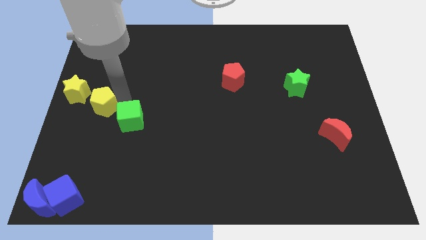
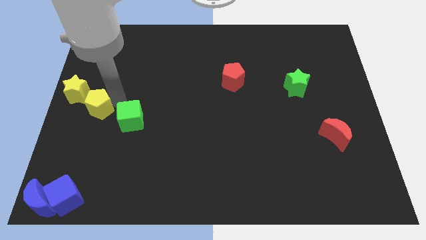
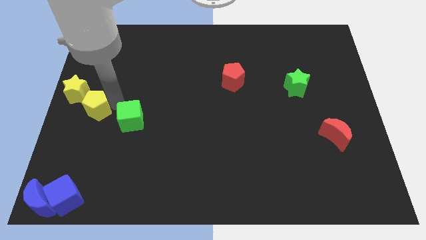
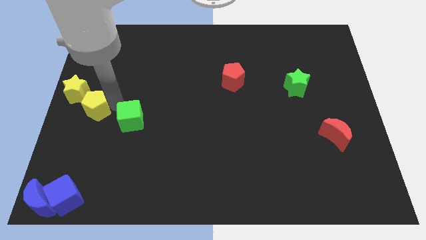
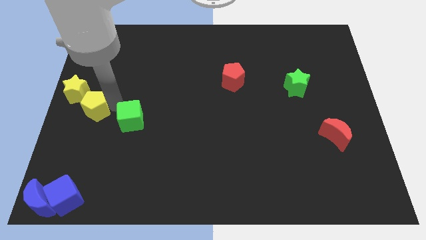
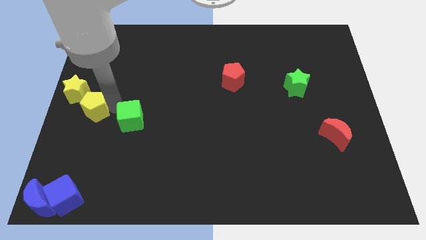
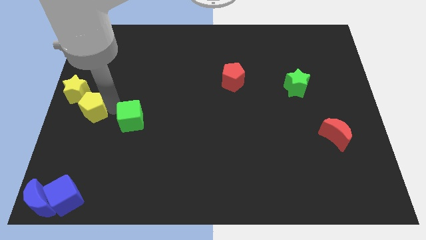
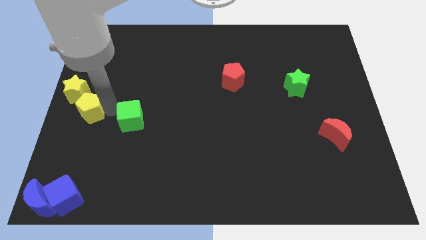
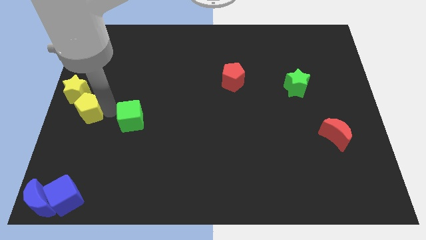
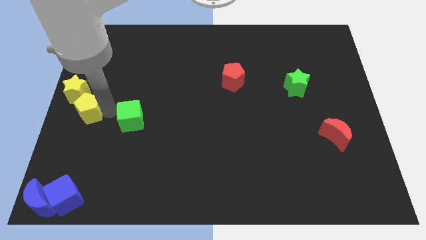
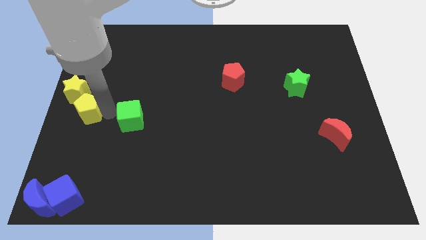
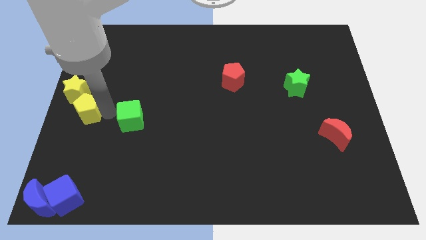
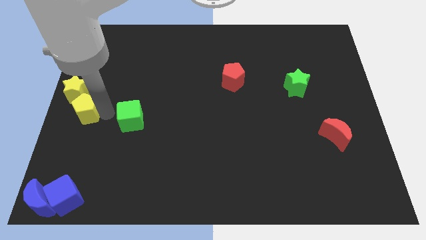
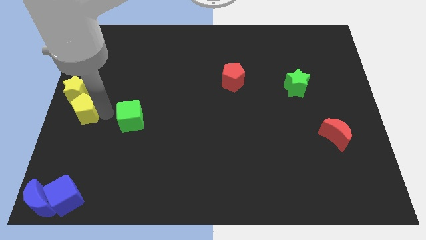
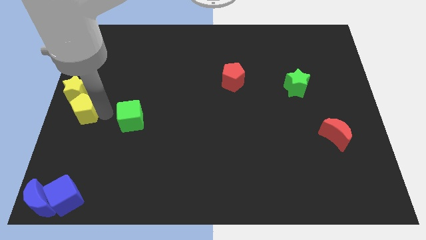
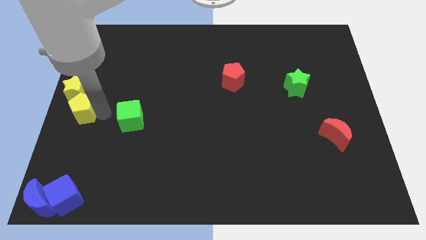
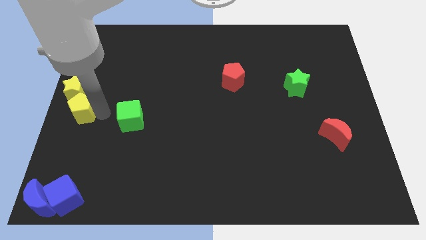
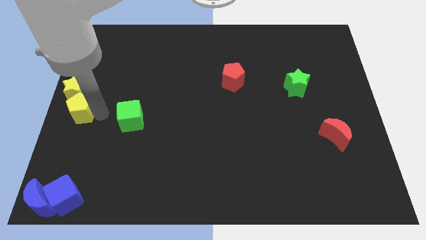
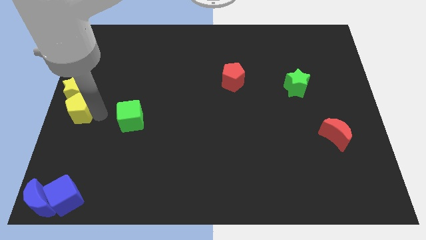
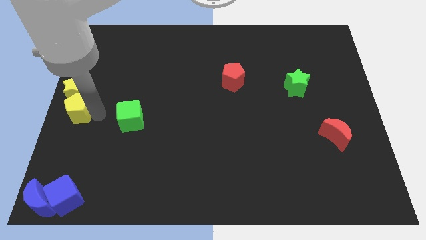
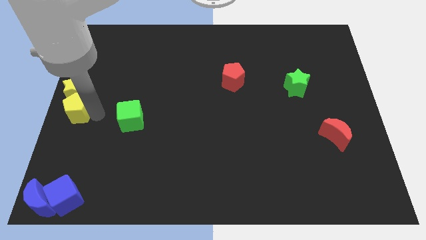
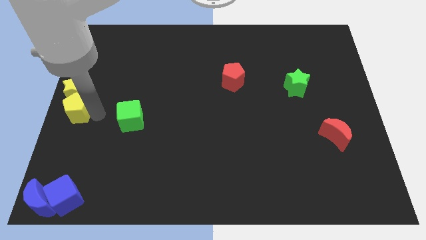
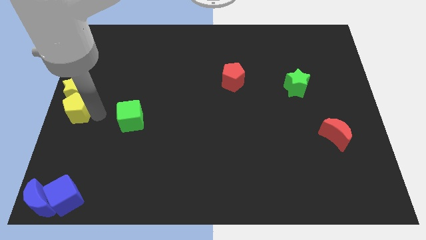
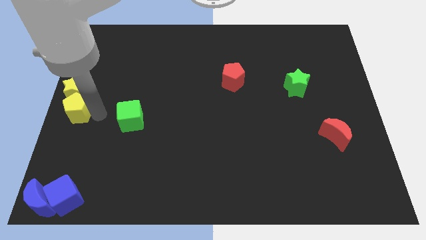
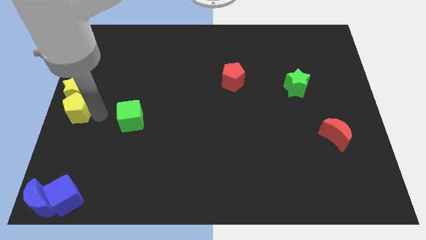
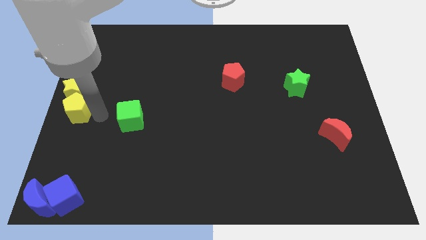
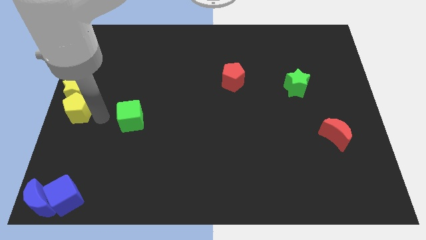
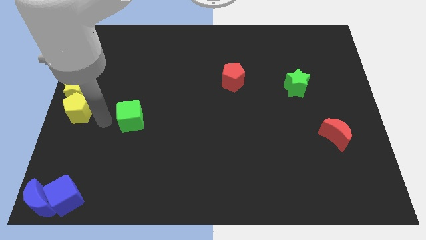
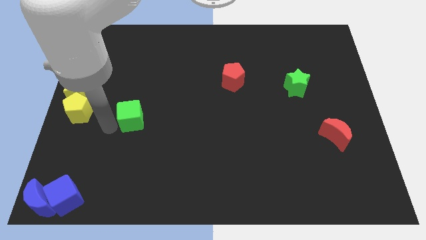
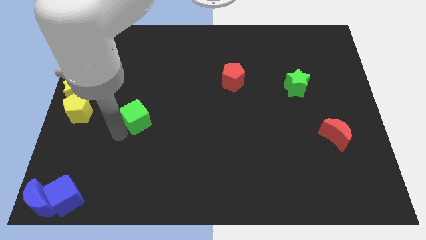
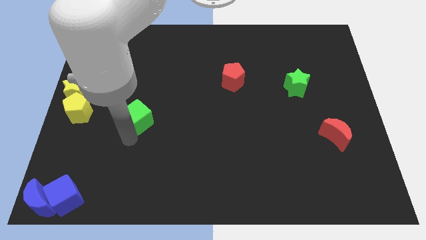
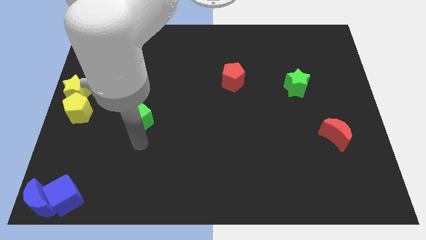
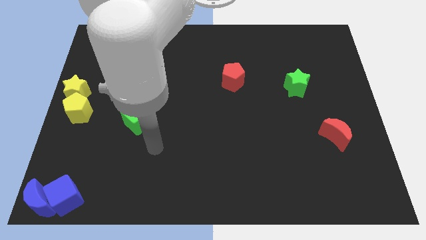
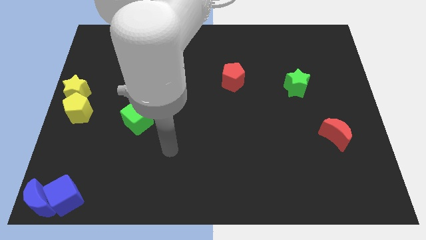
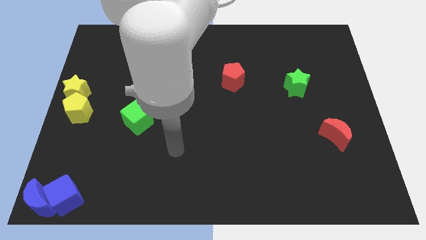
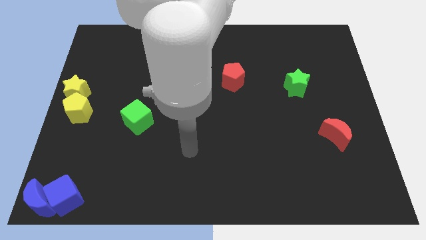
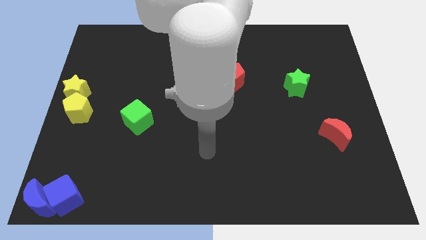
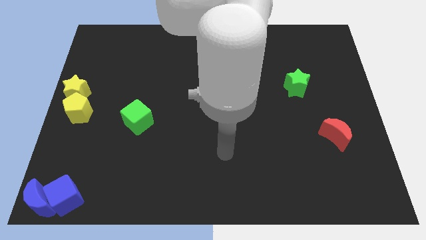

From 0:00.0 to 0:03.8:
push yellow pentagon below yellow star

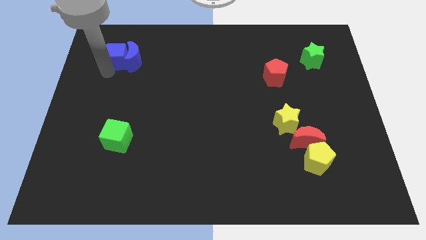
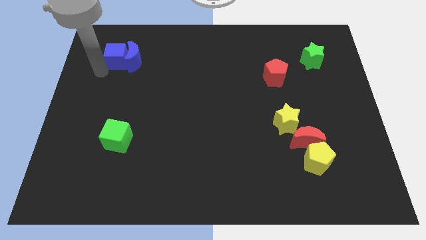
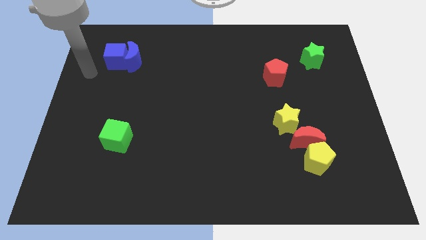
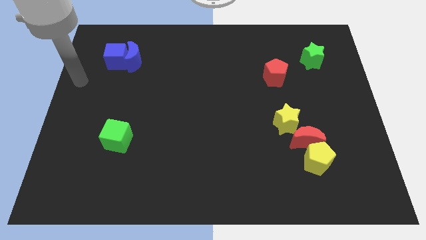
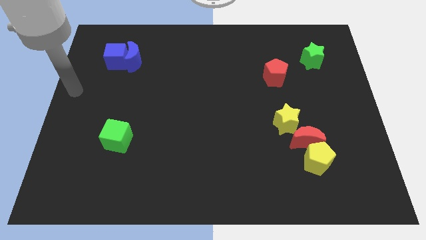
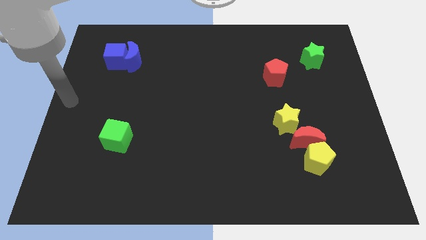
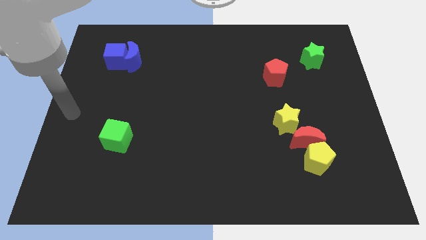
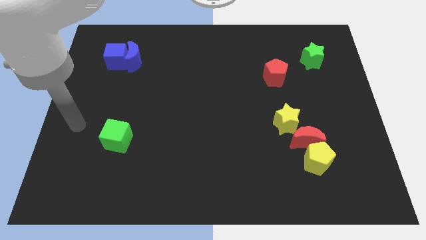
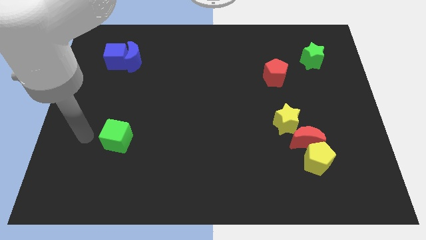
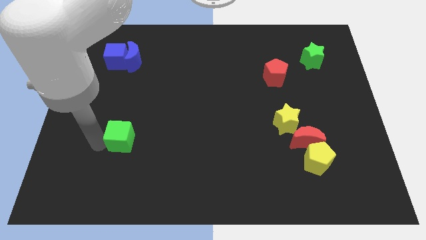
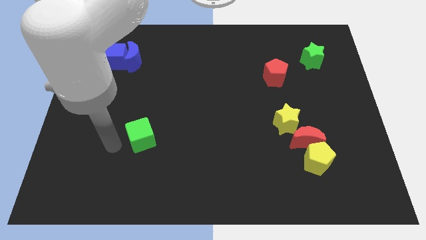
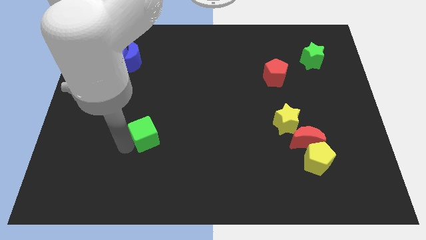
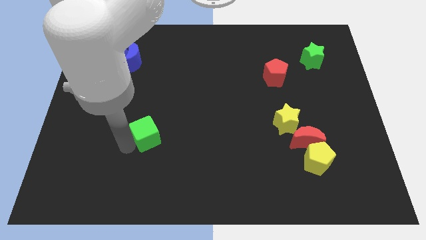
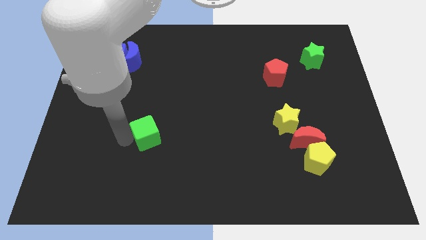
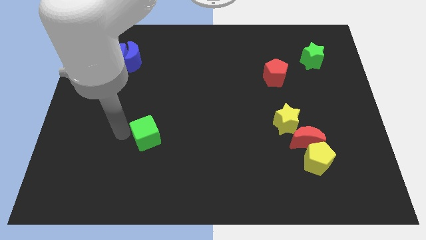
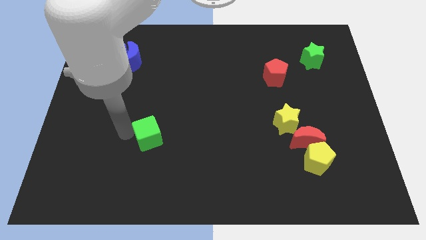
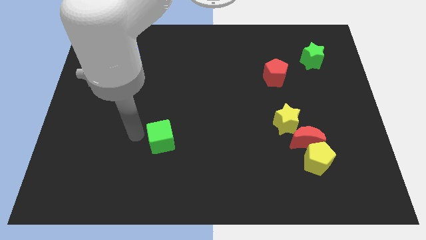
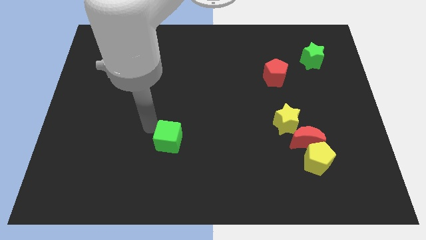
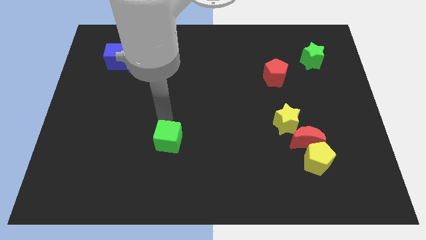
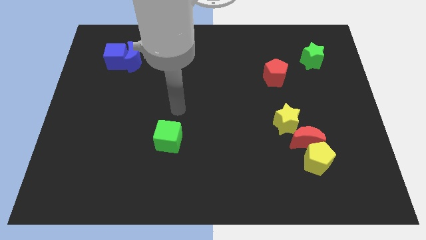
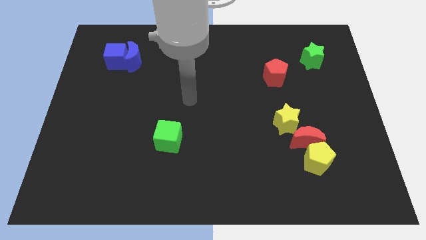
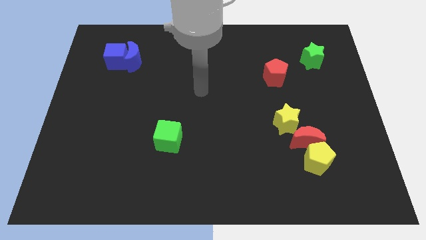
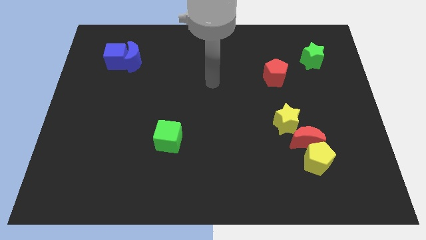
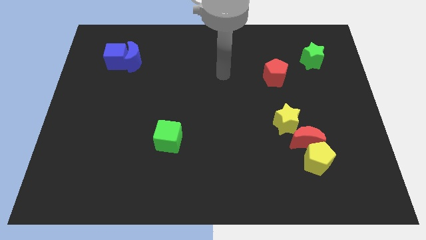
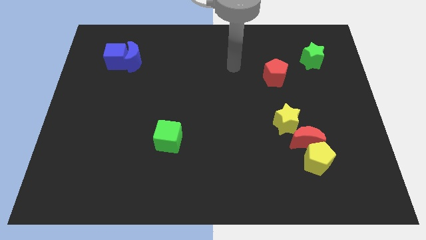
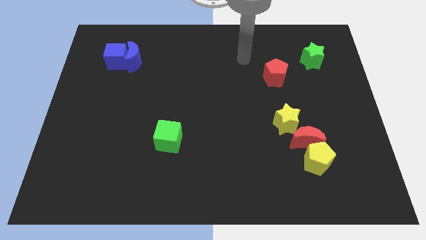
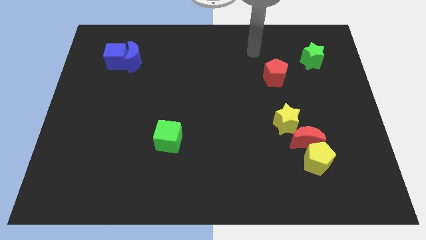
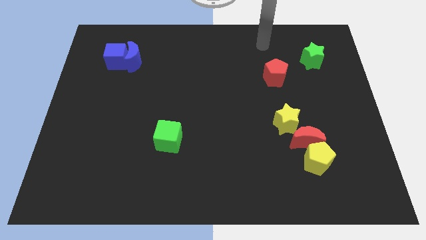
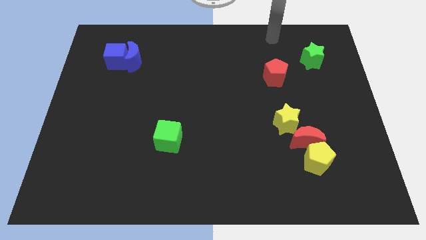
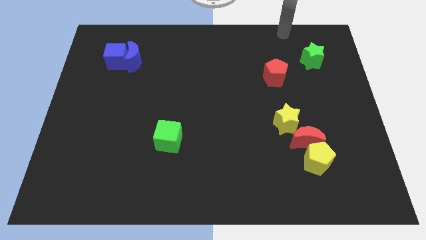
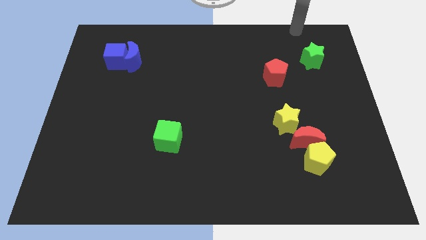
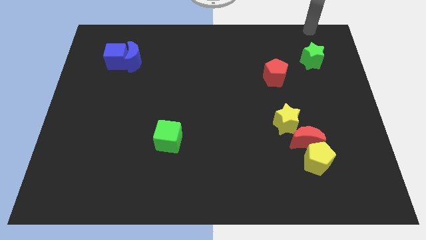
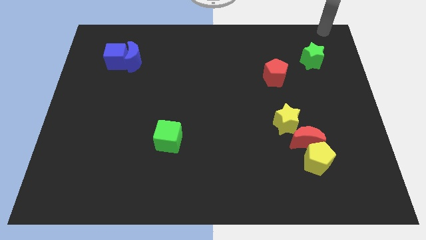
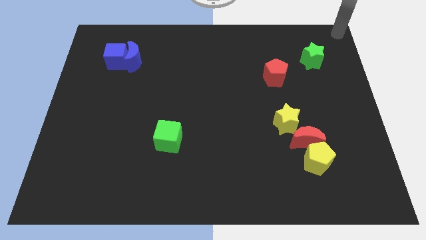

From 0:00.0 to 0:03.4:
push the green cube towards the center of the board

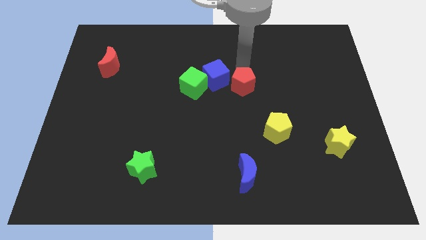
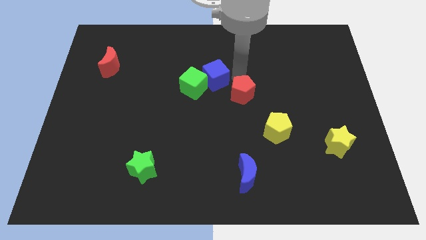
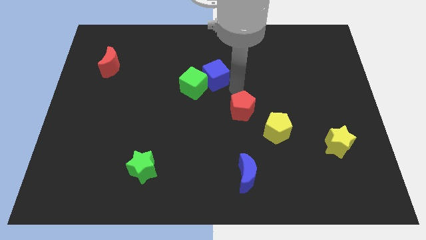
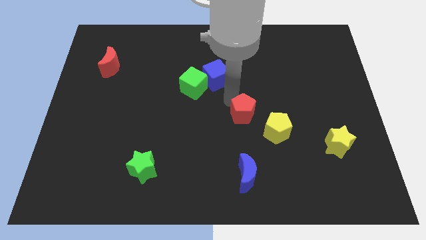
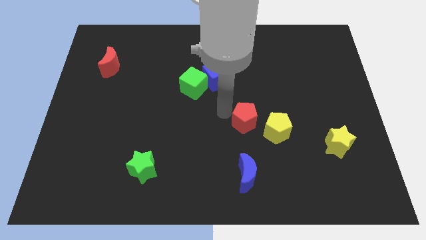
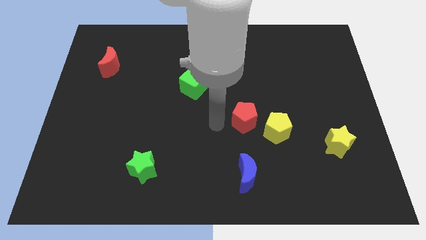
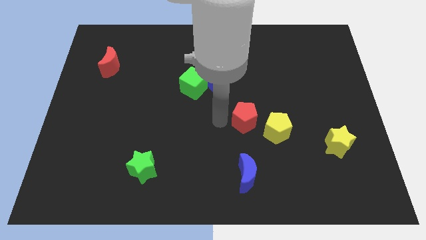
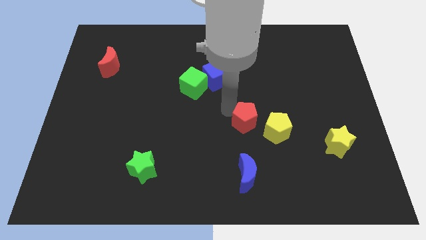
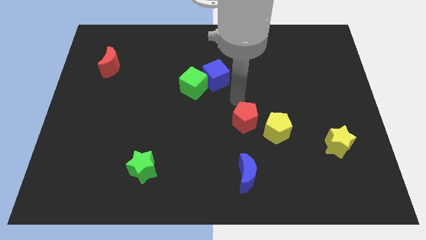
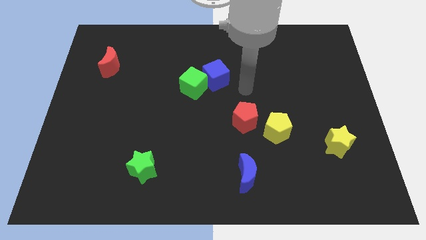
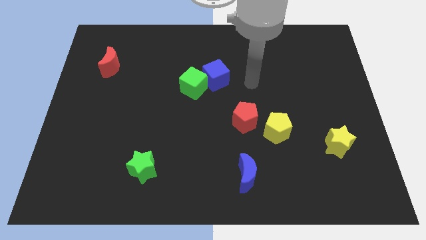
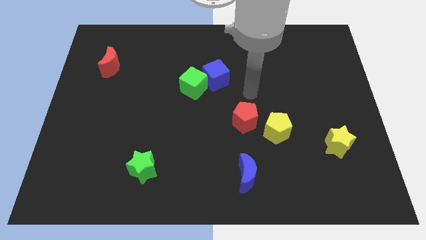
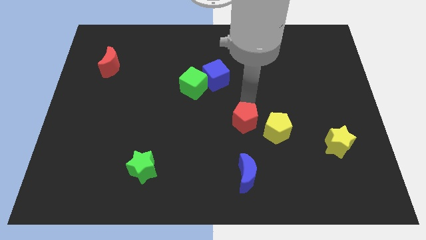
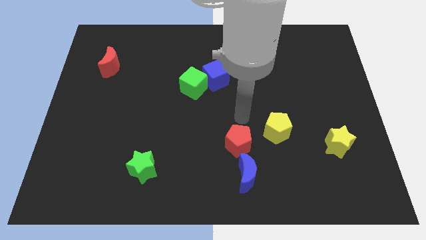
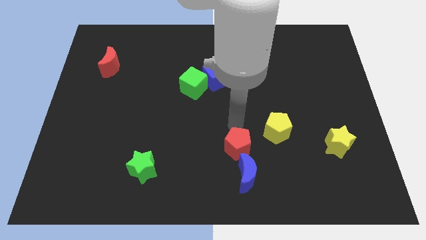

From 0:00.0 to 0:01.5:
place red pentagon near blue crescent

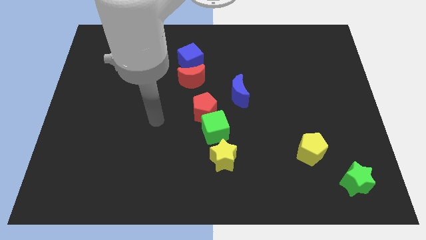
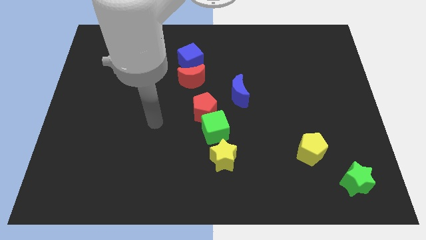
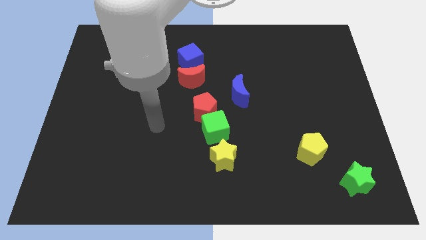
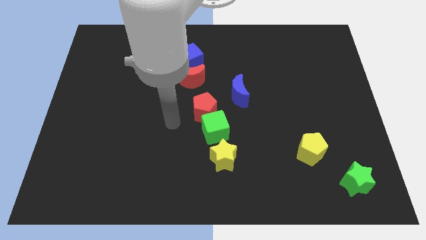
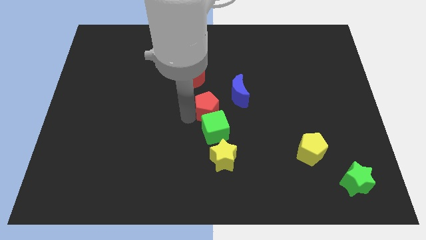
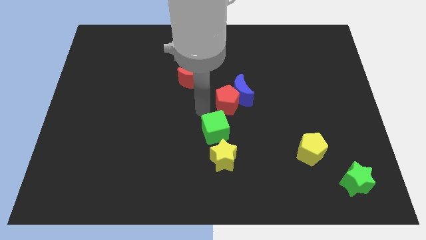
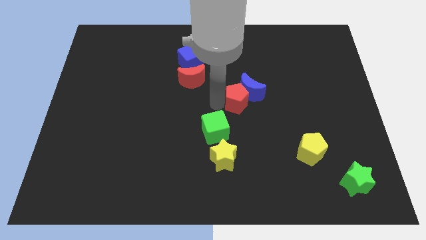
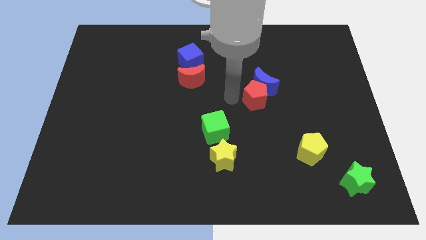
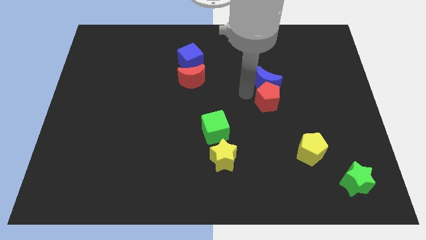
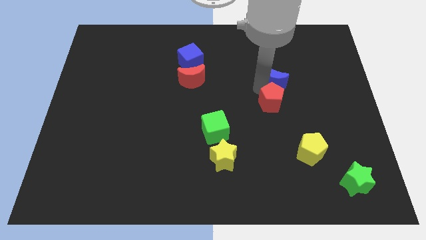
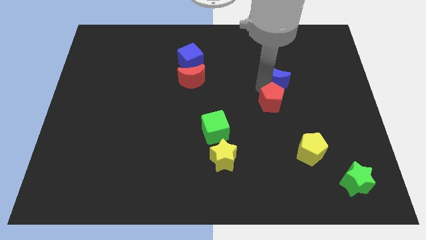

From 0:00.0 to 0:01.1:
move the red pentagon below the blue crescent
